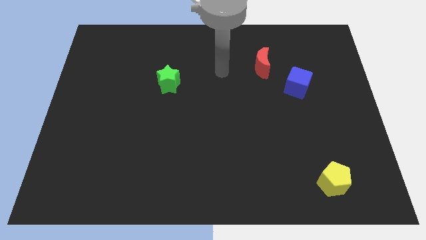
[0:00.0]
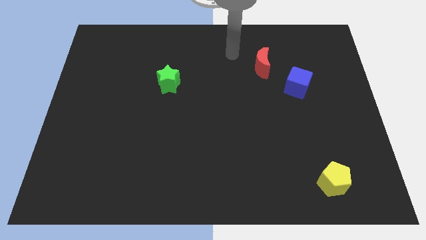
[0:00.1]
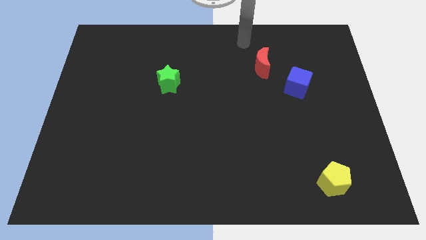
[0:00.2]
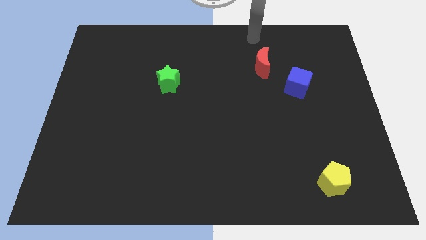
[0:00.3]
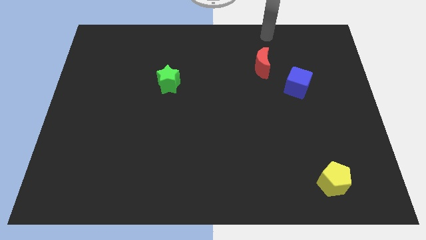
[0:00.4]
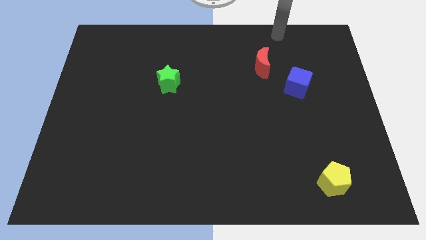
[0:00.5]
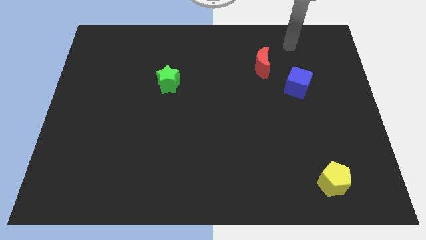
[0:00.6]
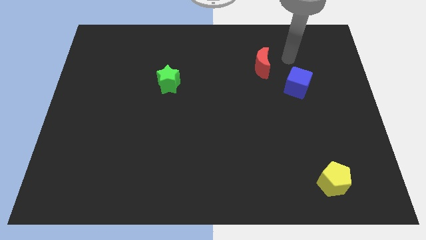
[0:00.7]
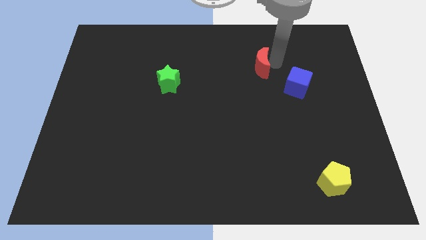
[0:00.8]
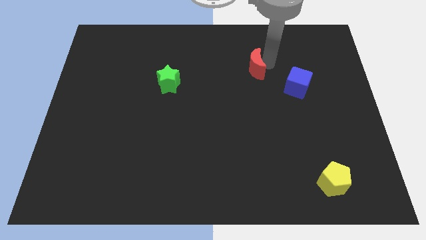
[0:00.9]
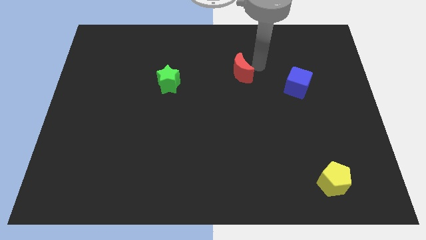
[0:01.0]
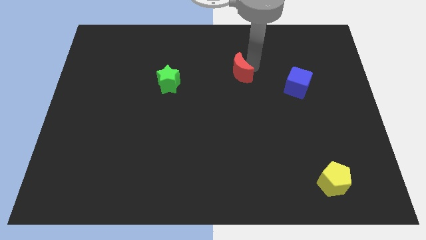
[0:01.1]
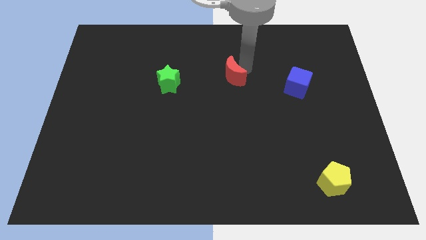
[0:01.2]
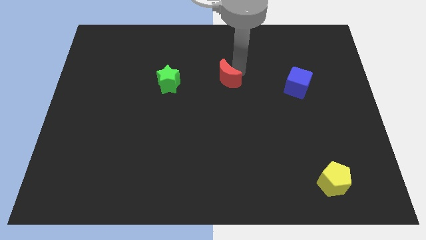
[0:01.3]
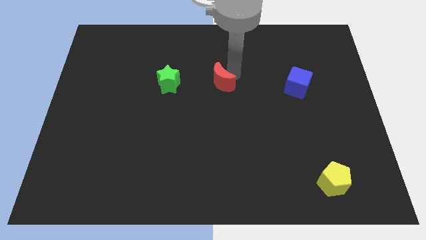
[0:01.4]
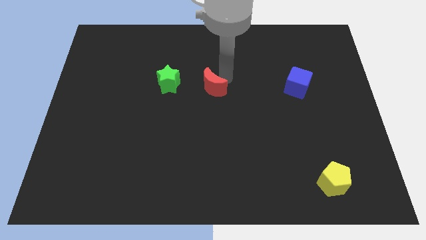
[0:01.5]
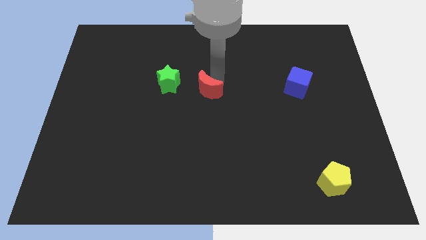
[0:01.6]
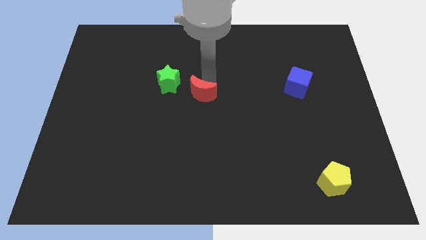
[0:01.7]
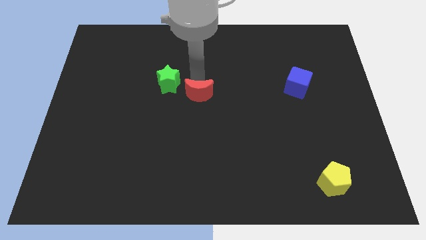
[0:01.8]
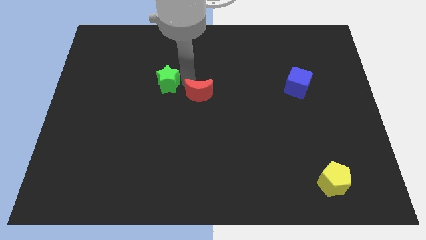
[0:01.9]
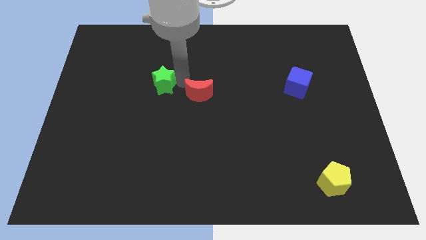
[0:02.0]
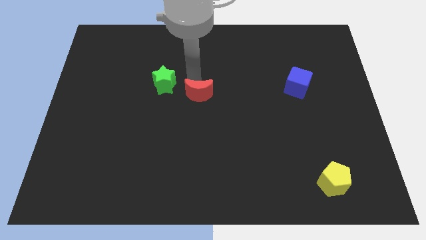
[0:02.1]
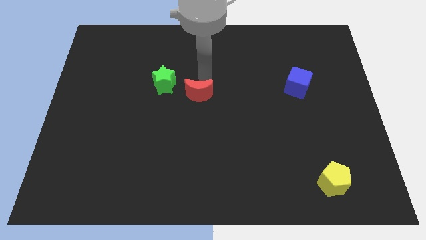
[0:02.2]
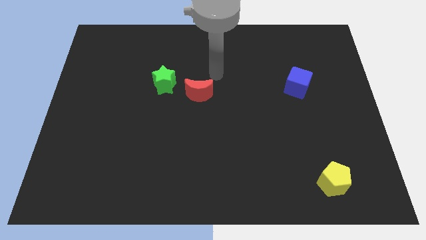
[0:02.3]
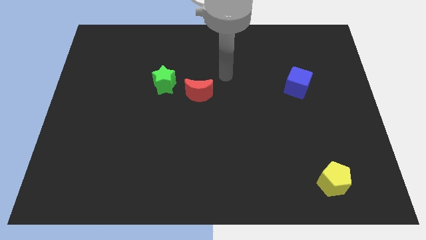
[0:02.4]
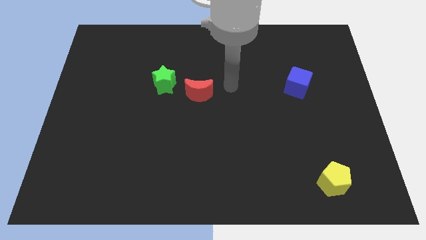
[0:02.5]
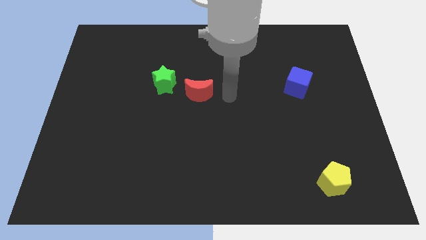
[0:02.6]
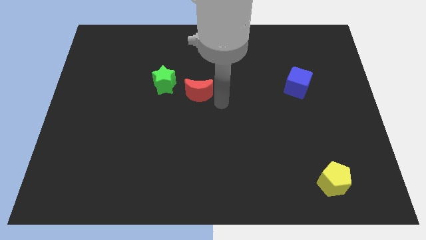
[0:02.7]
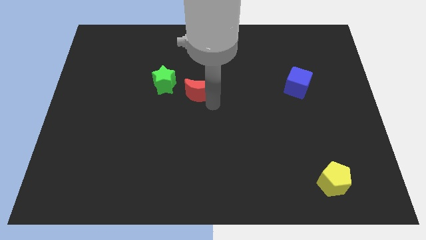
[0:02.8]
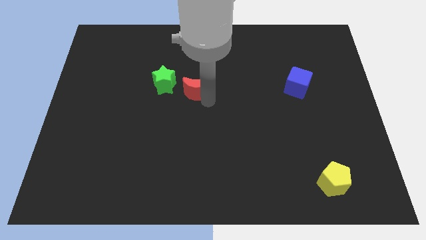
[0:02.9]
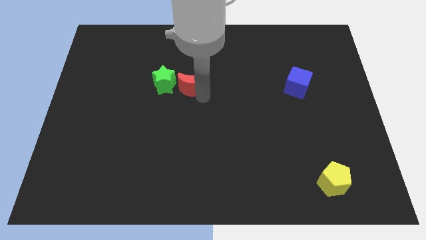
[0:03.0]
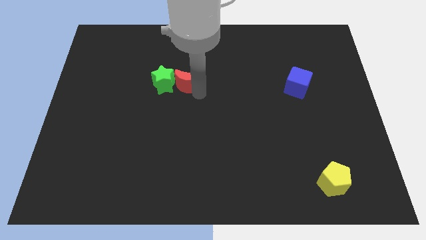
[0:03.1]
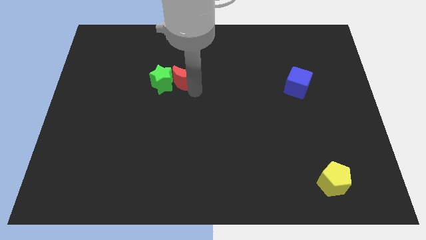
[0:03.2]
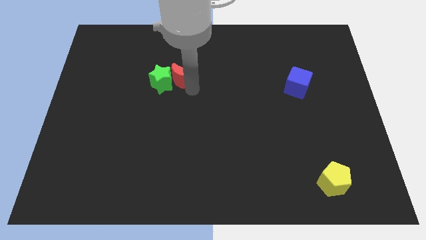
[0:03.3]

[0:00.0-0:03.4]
slide the red block next to the green star

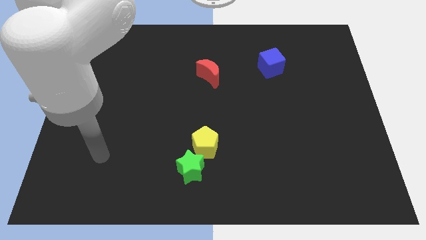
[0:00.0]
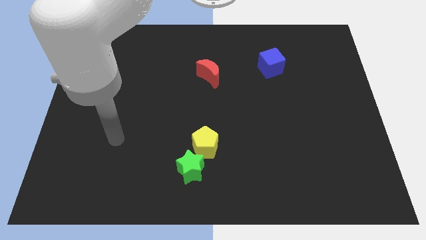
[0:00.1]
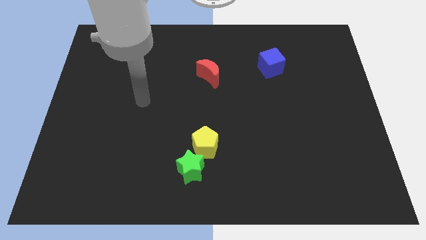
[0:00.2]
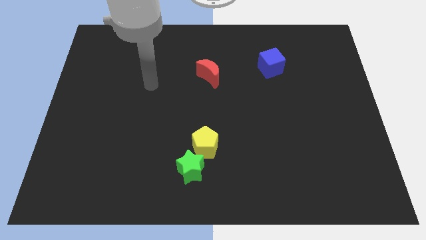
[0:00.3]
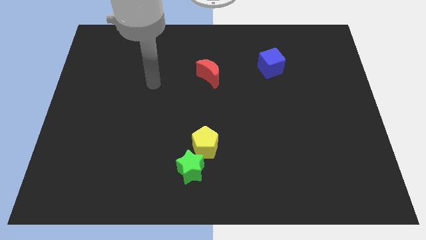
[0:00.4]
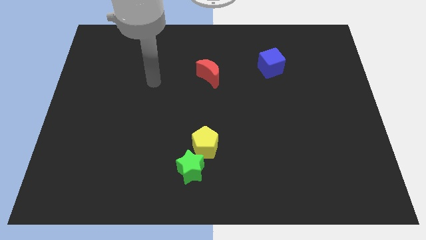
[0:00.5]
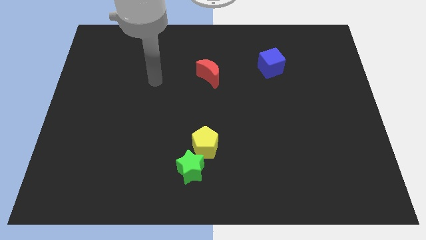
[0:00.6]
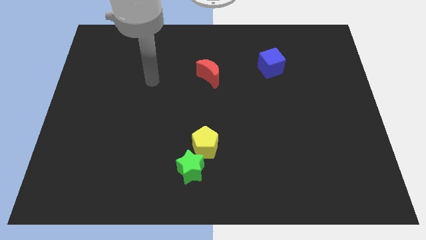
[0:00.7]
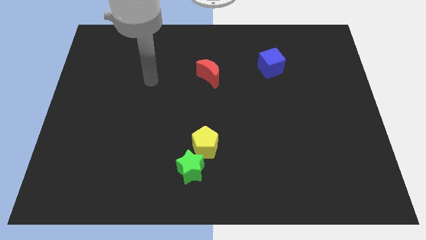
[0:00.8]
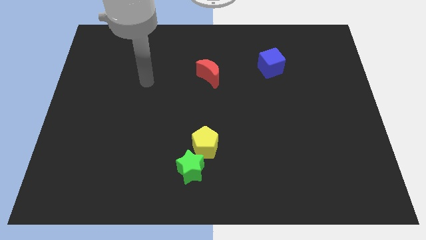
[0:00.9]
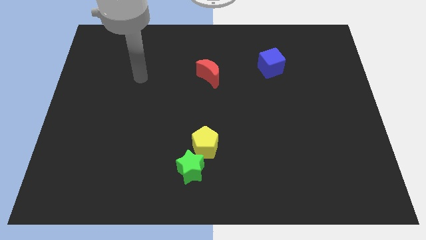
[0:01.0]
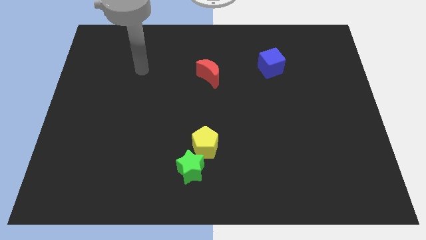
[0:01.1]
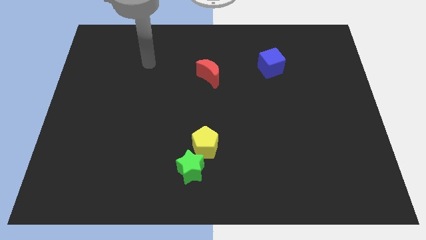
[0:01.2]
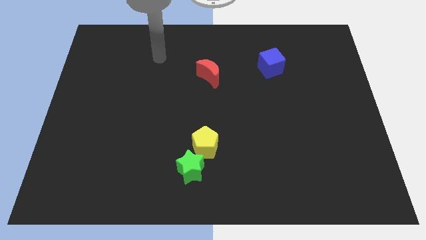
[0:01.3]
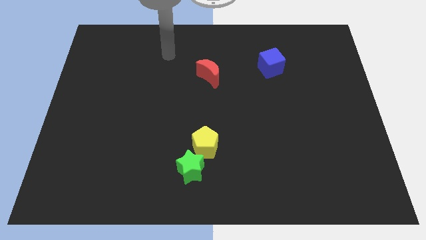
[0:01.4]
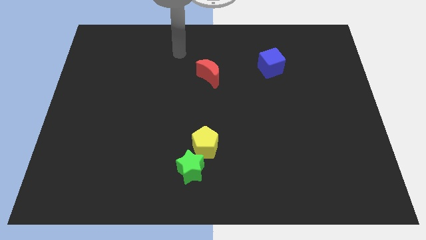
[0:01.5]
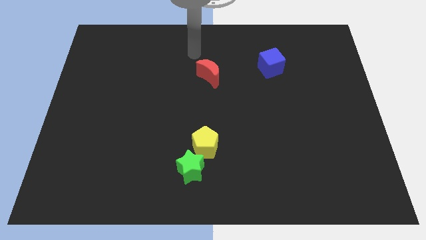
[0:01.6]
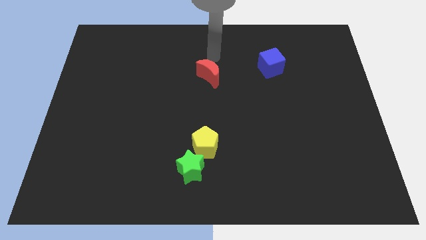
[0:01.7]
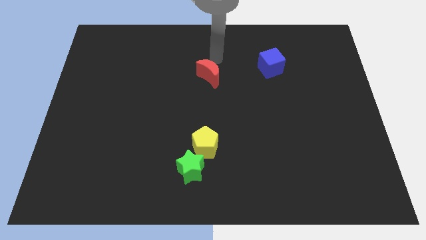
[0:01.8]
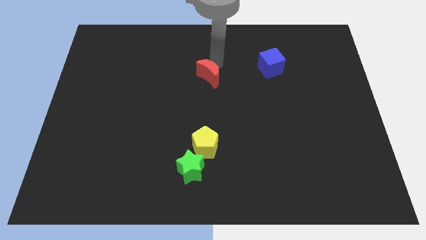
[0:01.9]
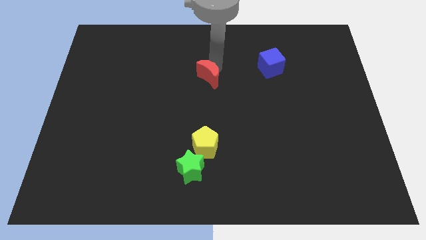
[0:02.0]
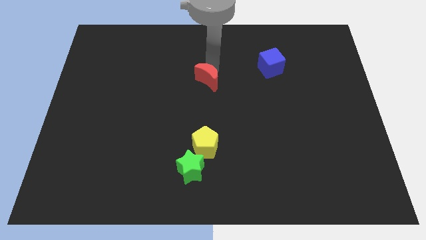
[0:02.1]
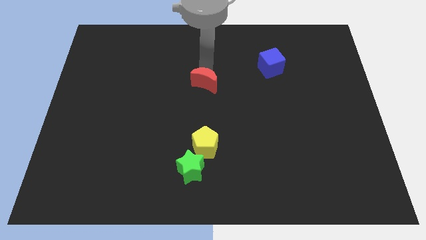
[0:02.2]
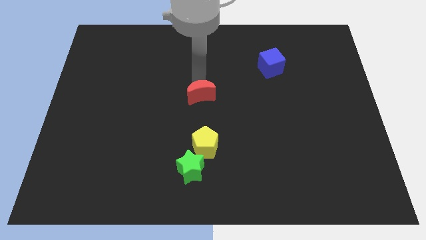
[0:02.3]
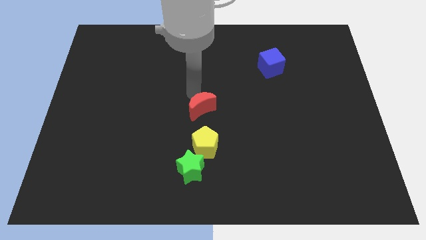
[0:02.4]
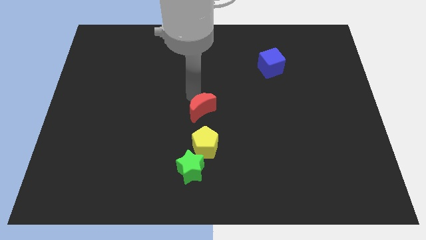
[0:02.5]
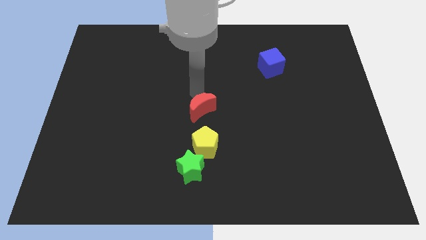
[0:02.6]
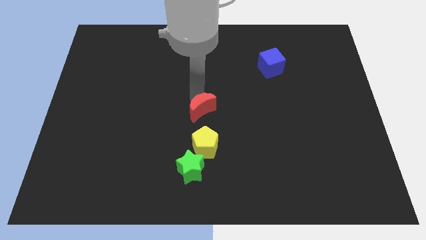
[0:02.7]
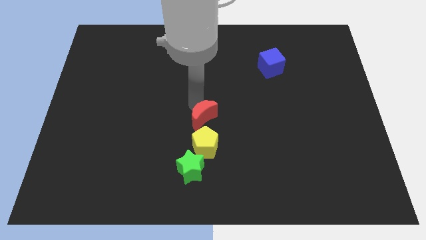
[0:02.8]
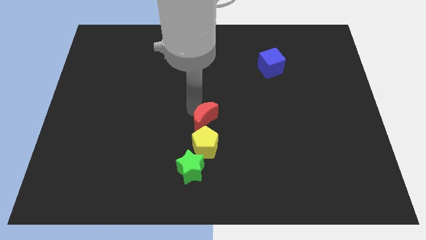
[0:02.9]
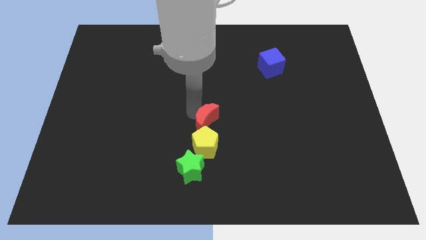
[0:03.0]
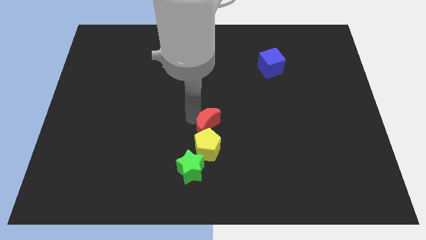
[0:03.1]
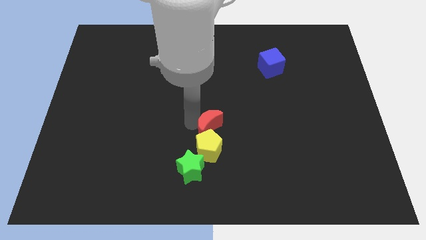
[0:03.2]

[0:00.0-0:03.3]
move the red block to the yellow pentagon

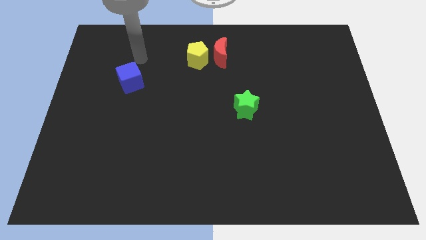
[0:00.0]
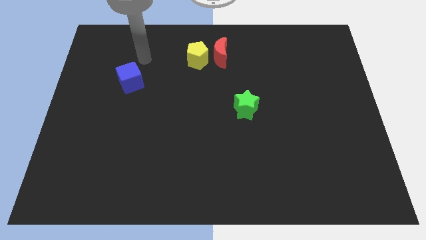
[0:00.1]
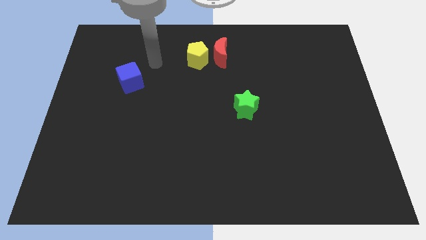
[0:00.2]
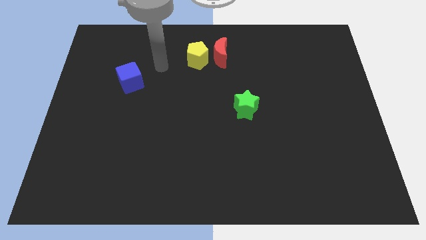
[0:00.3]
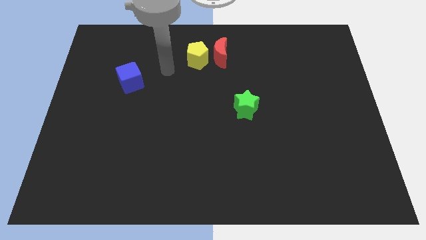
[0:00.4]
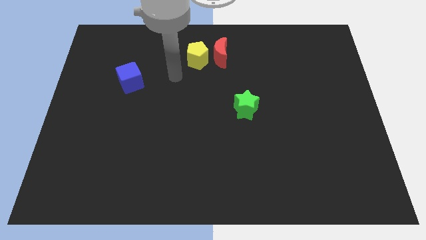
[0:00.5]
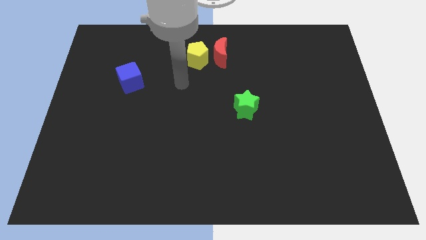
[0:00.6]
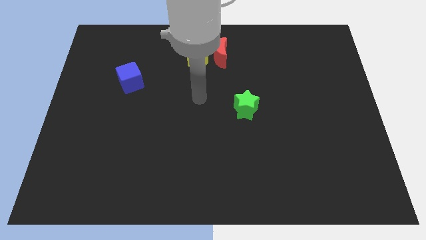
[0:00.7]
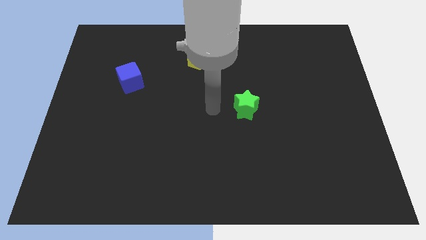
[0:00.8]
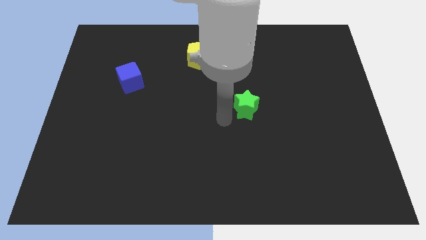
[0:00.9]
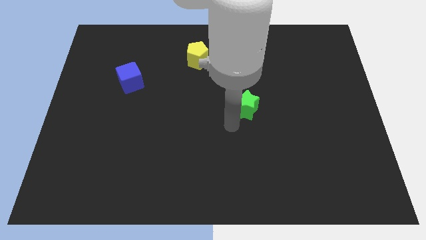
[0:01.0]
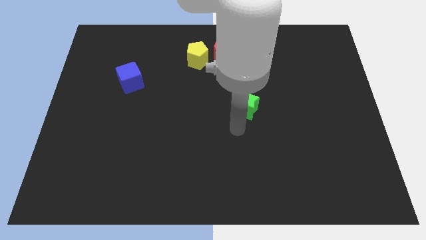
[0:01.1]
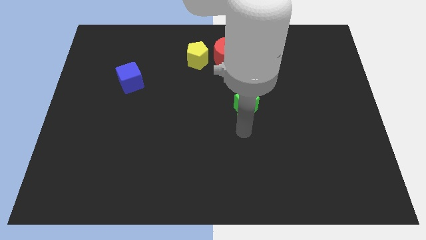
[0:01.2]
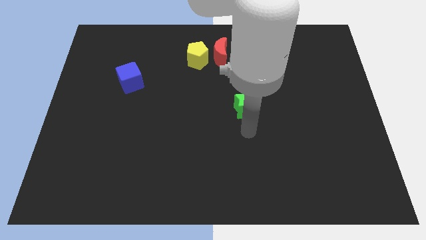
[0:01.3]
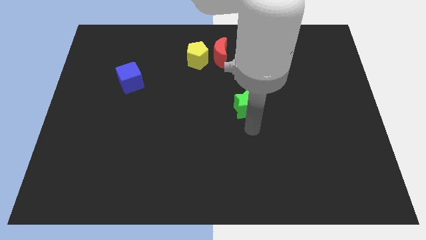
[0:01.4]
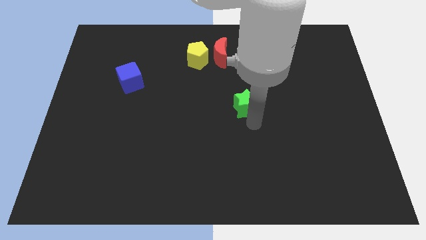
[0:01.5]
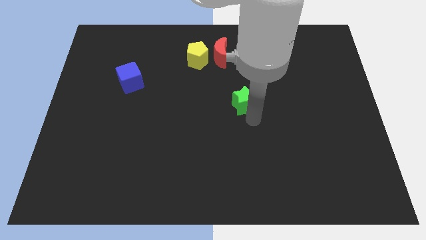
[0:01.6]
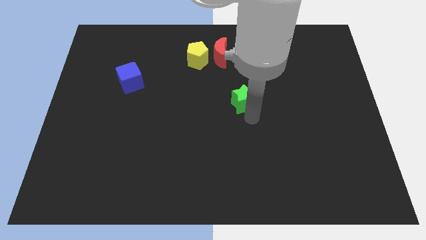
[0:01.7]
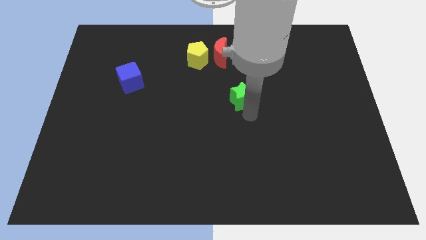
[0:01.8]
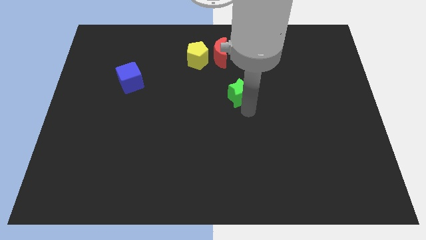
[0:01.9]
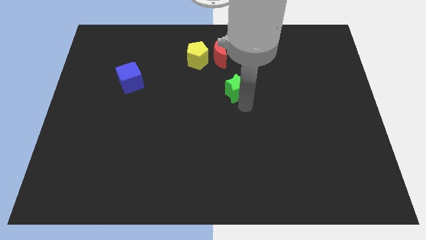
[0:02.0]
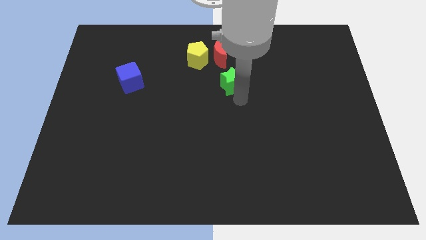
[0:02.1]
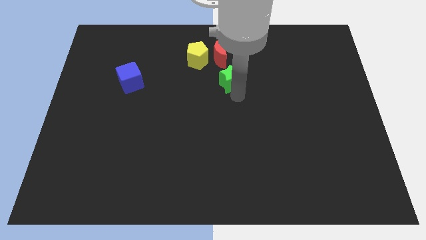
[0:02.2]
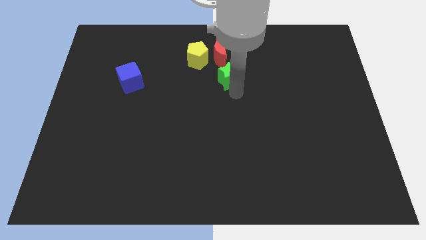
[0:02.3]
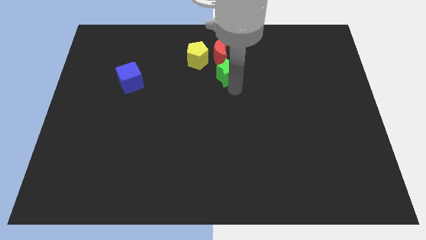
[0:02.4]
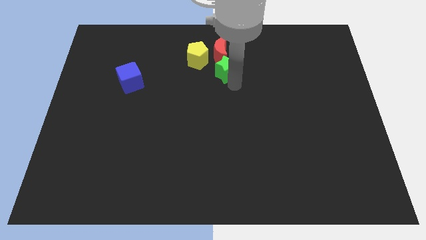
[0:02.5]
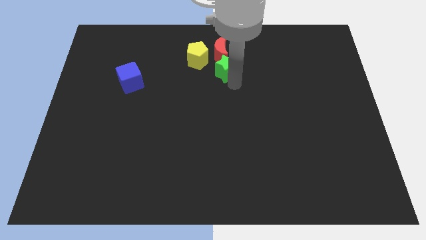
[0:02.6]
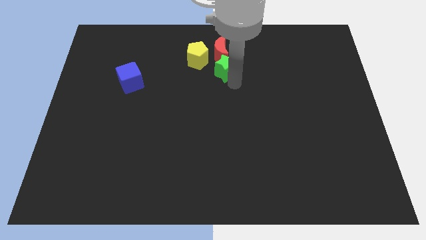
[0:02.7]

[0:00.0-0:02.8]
push the star towards the red block
